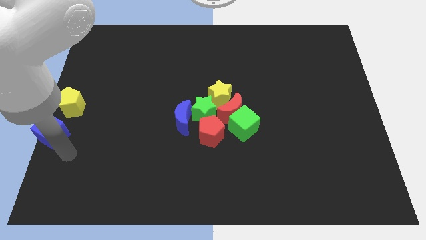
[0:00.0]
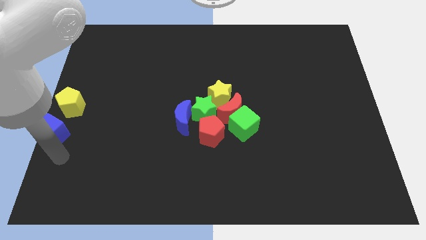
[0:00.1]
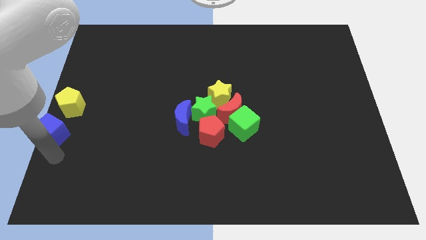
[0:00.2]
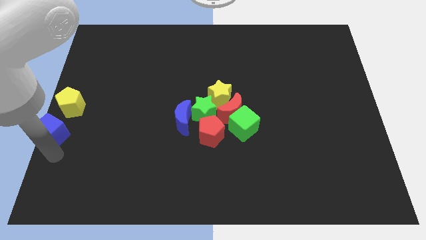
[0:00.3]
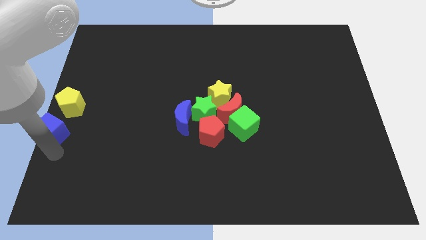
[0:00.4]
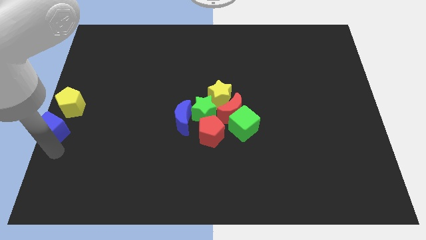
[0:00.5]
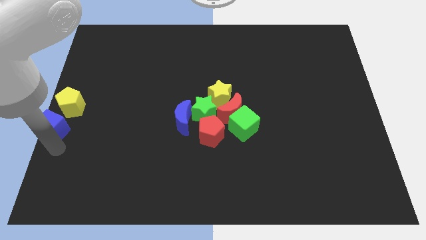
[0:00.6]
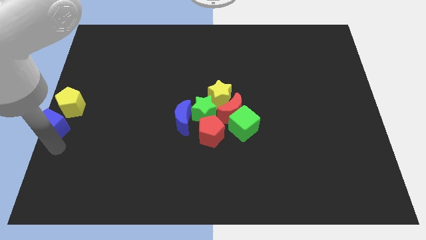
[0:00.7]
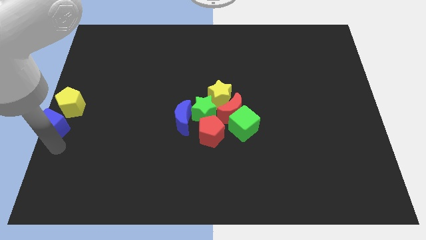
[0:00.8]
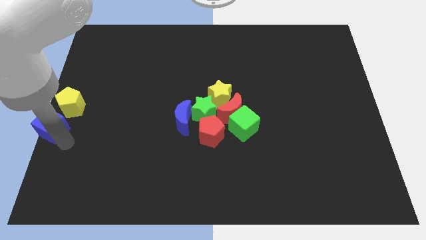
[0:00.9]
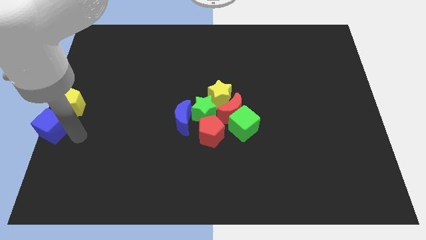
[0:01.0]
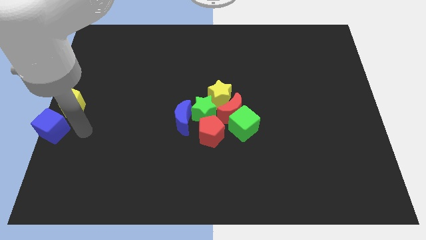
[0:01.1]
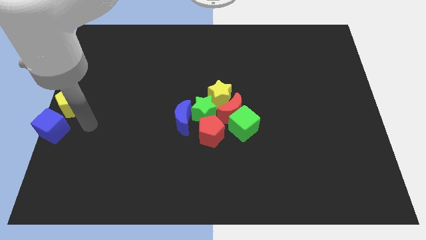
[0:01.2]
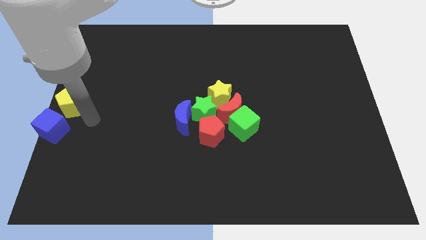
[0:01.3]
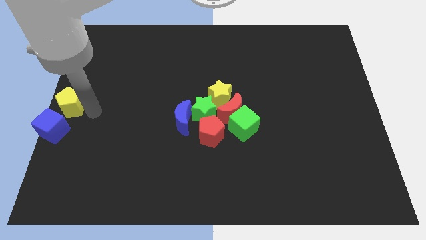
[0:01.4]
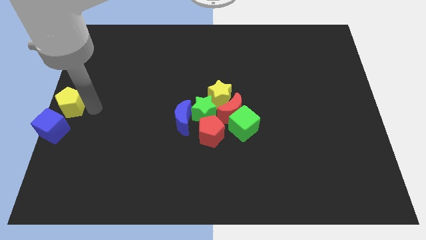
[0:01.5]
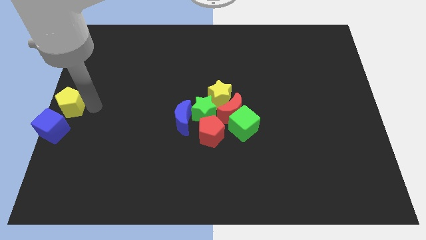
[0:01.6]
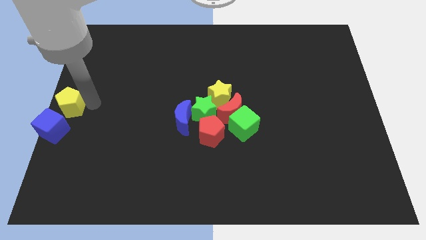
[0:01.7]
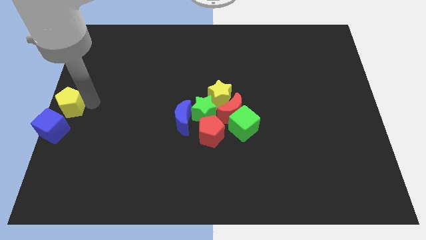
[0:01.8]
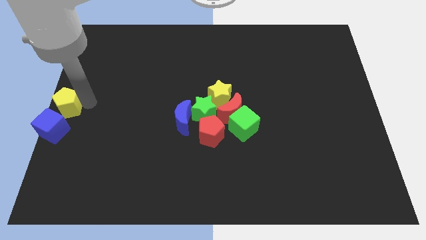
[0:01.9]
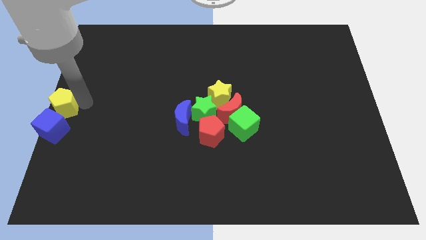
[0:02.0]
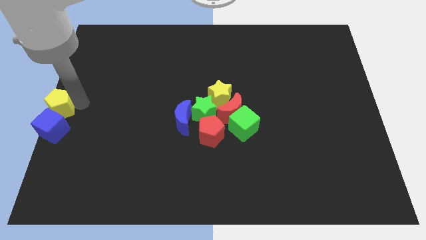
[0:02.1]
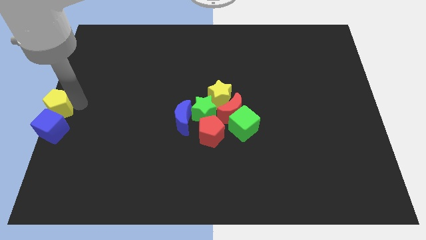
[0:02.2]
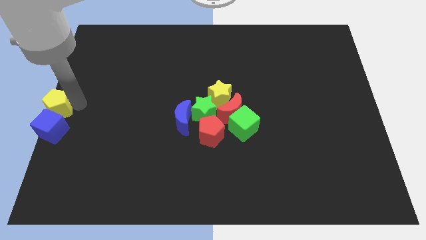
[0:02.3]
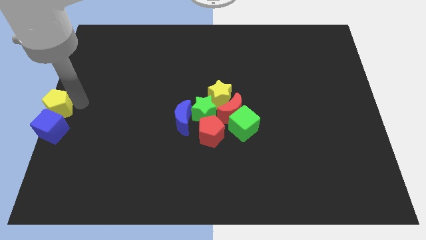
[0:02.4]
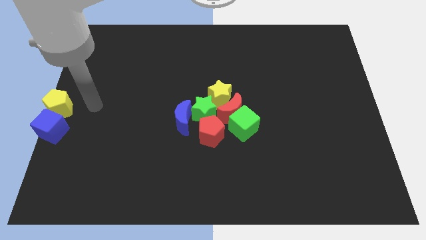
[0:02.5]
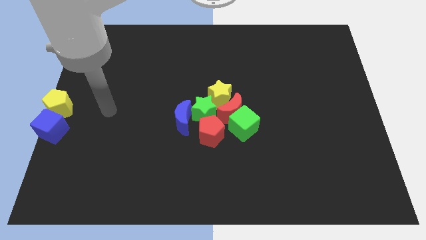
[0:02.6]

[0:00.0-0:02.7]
adjust the yellow pentagon and the blue cube at the left center of the board

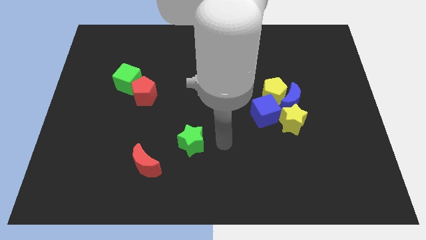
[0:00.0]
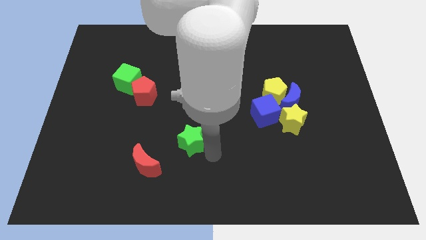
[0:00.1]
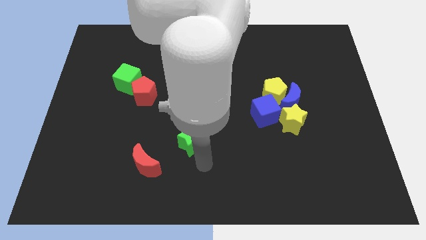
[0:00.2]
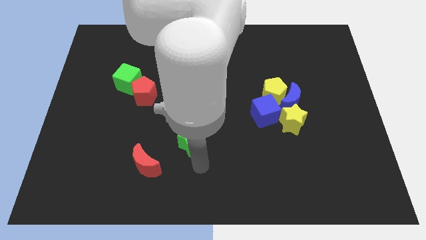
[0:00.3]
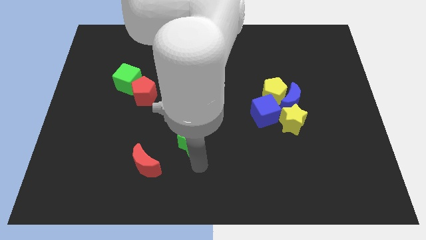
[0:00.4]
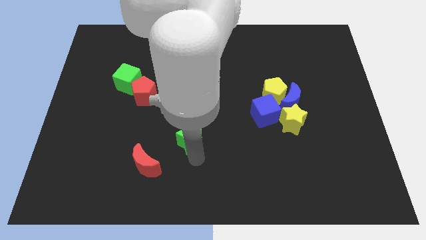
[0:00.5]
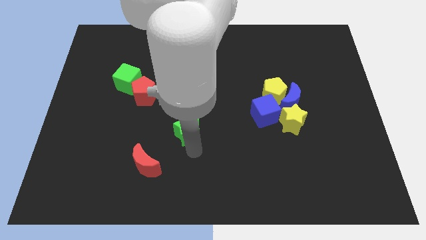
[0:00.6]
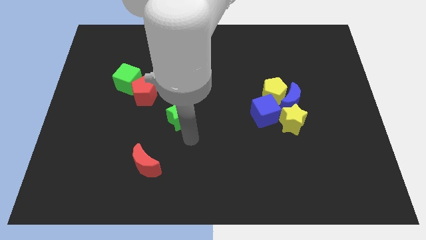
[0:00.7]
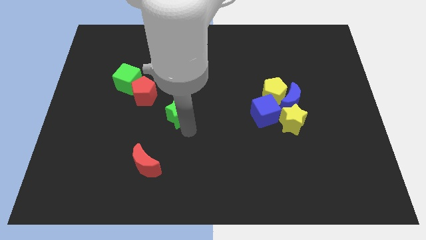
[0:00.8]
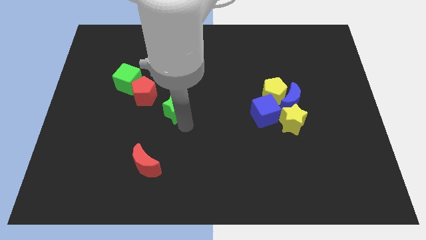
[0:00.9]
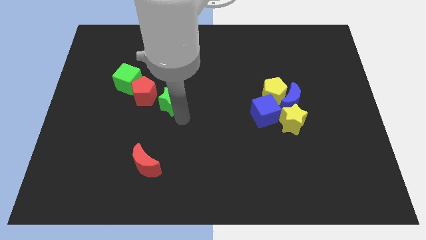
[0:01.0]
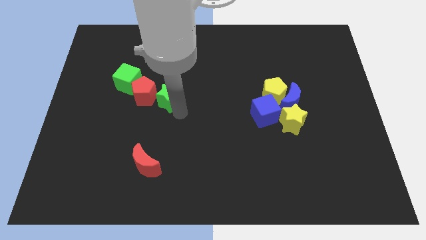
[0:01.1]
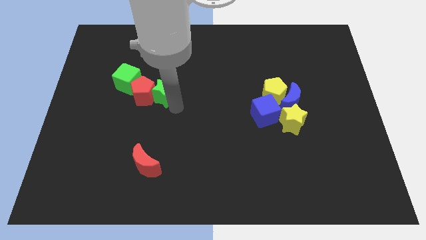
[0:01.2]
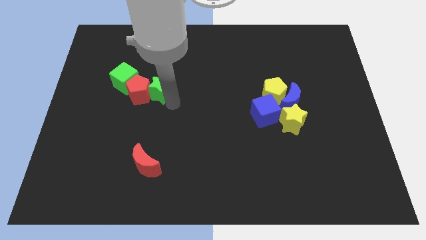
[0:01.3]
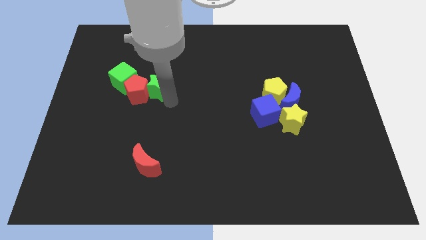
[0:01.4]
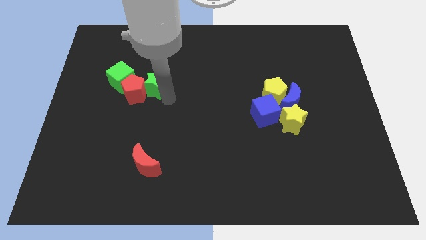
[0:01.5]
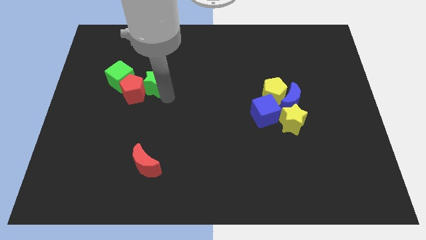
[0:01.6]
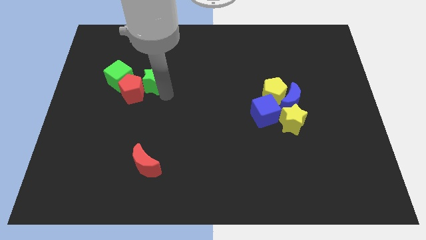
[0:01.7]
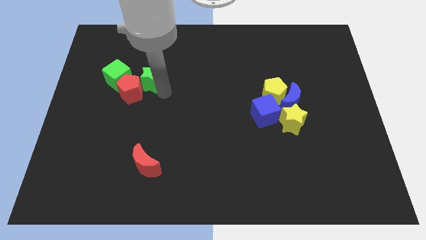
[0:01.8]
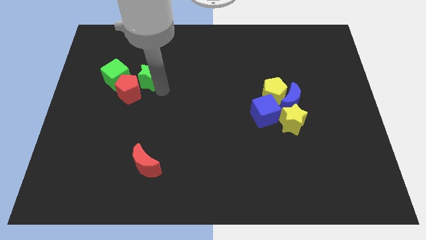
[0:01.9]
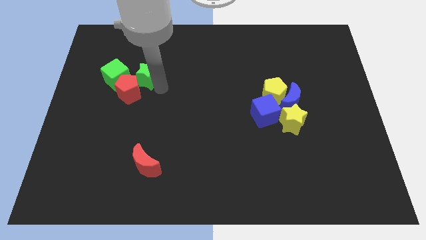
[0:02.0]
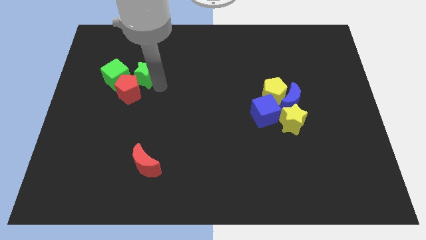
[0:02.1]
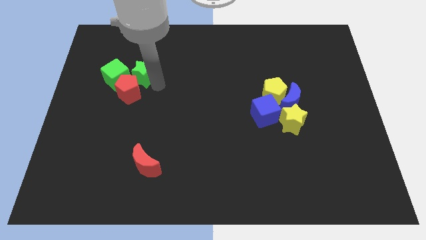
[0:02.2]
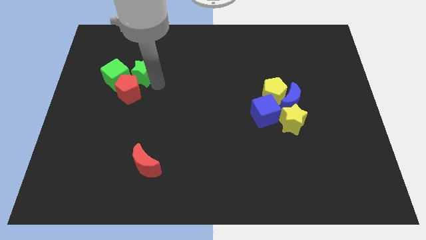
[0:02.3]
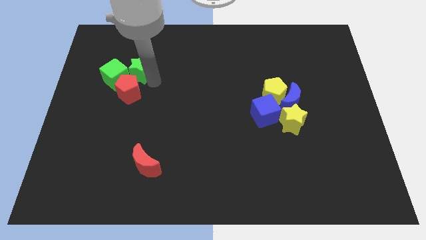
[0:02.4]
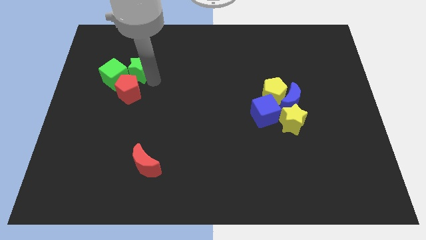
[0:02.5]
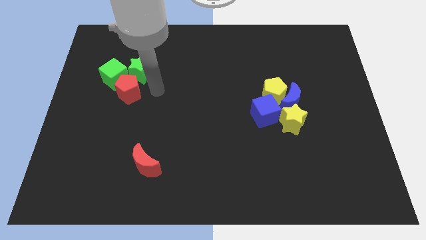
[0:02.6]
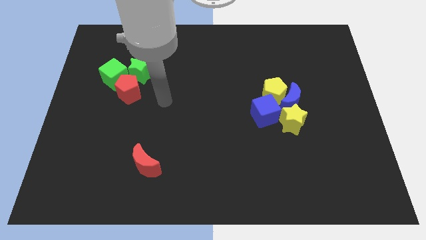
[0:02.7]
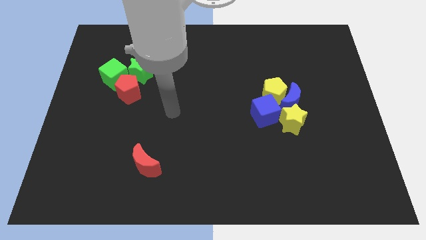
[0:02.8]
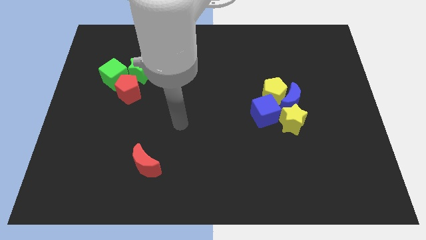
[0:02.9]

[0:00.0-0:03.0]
place green star right to green cube

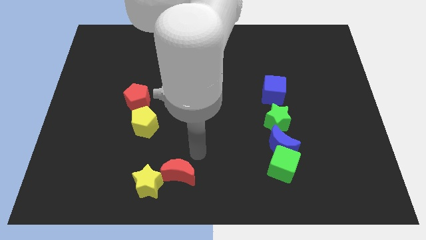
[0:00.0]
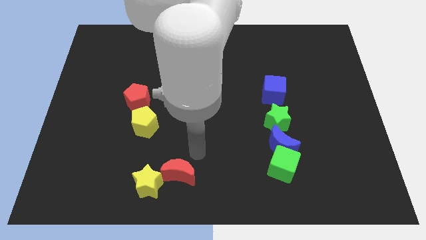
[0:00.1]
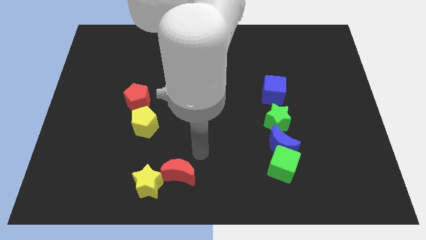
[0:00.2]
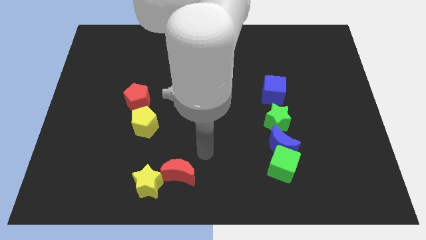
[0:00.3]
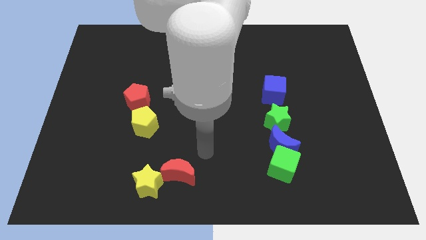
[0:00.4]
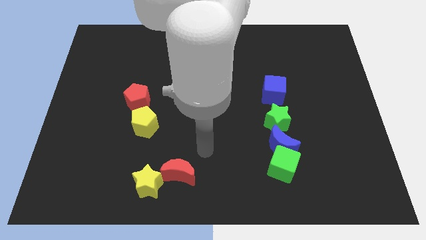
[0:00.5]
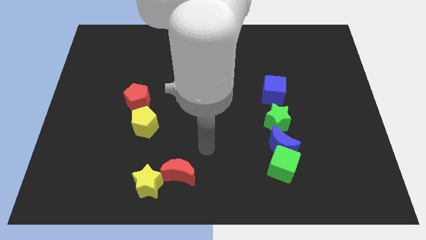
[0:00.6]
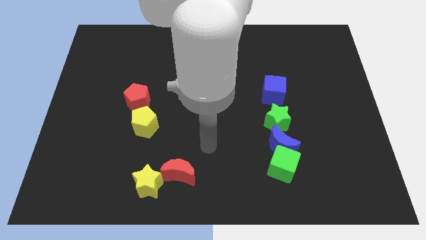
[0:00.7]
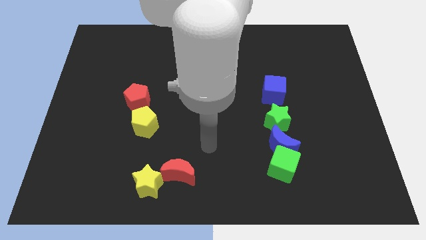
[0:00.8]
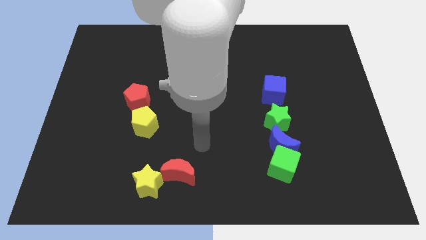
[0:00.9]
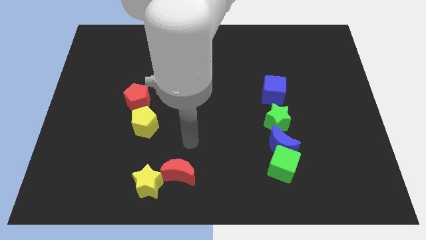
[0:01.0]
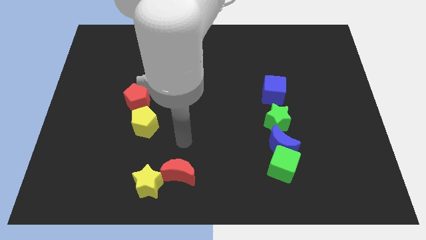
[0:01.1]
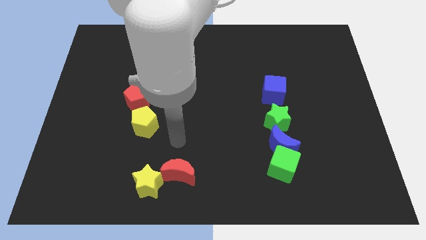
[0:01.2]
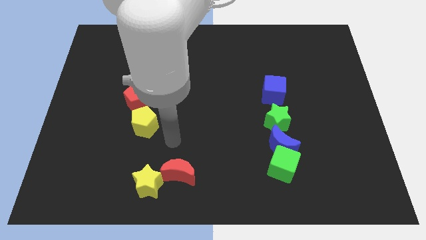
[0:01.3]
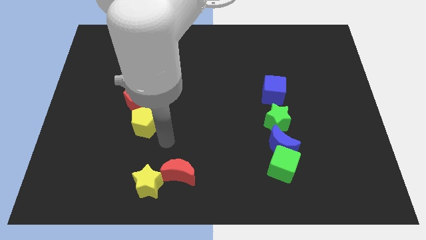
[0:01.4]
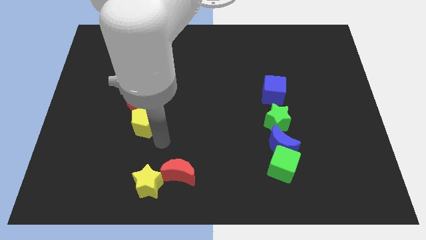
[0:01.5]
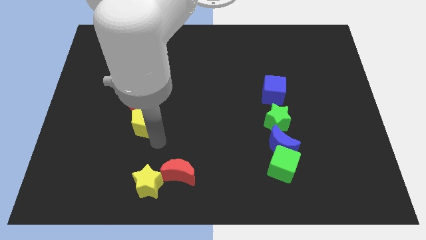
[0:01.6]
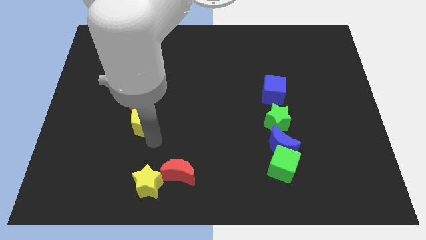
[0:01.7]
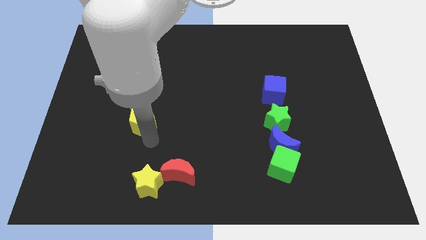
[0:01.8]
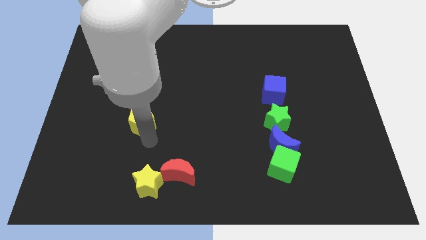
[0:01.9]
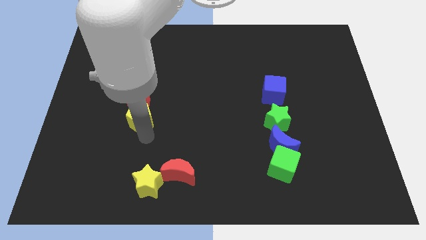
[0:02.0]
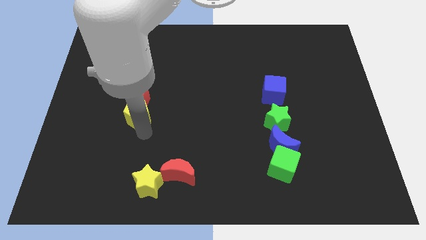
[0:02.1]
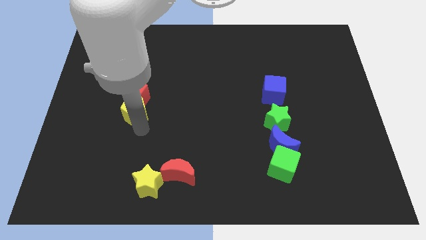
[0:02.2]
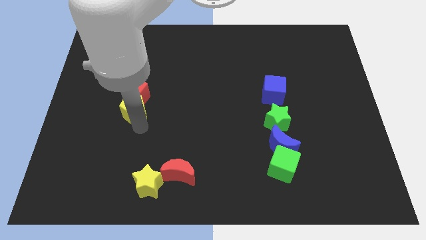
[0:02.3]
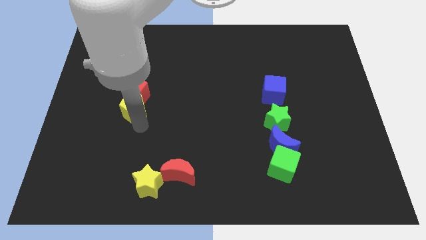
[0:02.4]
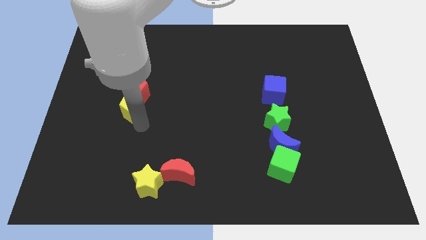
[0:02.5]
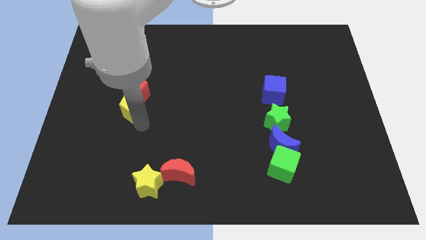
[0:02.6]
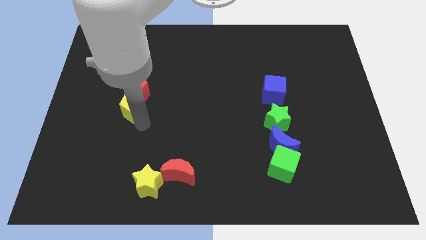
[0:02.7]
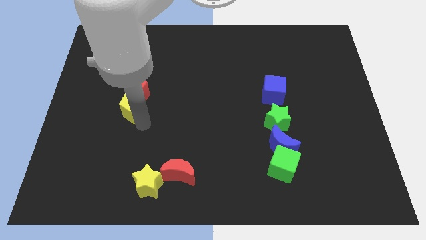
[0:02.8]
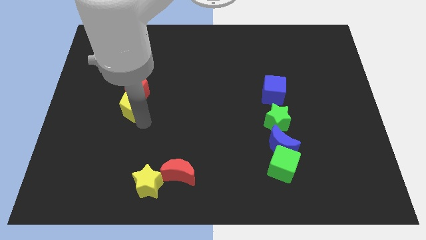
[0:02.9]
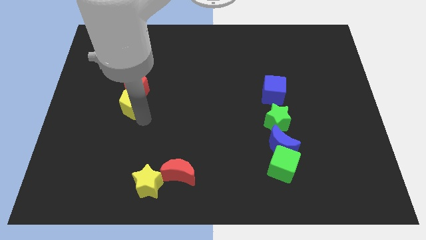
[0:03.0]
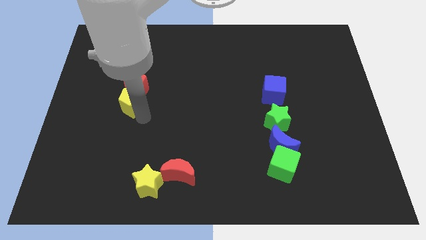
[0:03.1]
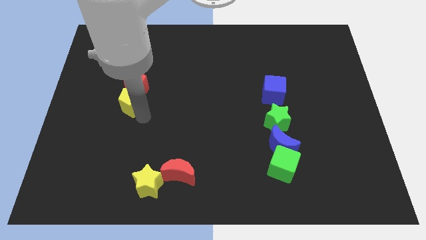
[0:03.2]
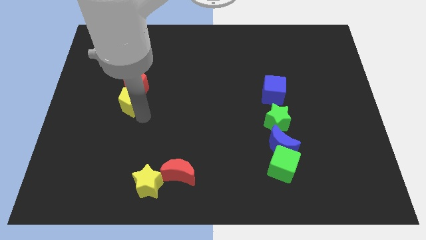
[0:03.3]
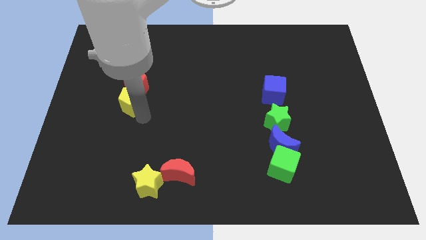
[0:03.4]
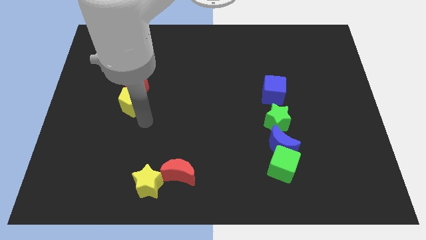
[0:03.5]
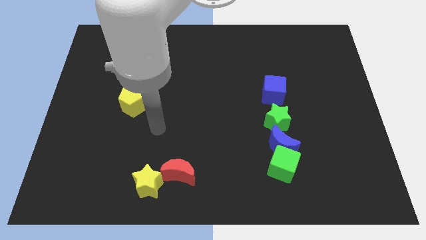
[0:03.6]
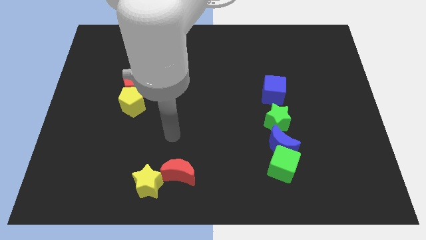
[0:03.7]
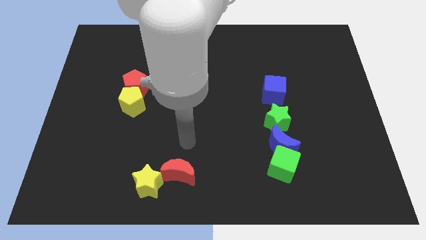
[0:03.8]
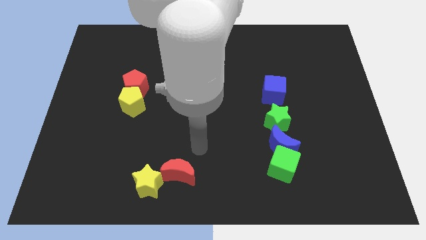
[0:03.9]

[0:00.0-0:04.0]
move the red and yellow pentagon slightly towards the top
